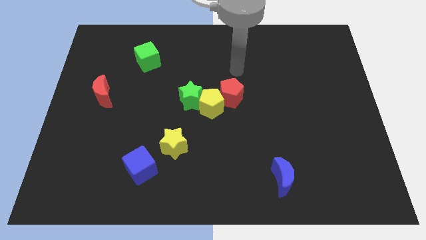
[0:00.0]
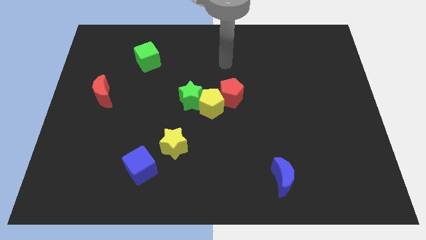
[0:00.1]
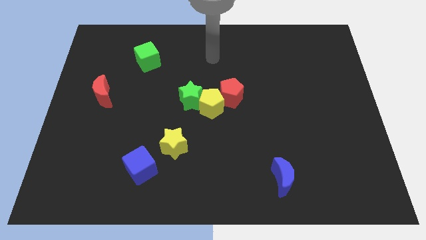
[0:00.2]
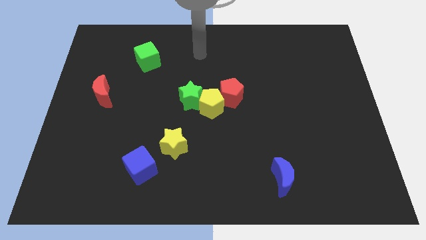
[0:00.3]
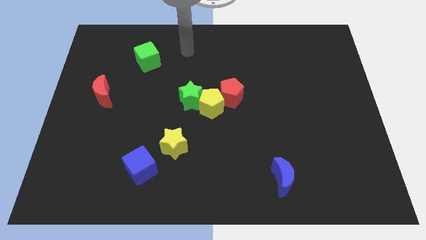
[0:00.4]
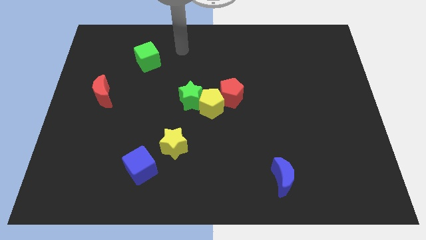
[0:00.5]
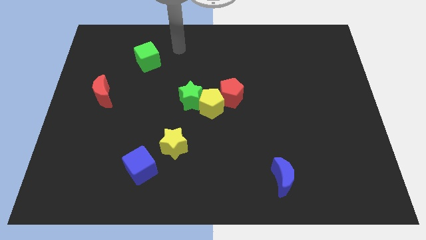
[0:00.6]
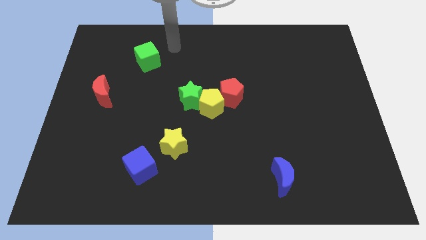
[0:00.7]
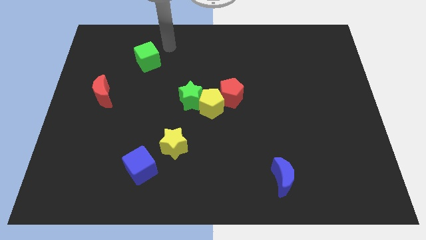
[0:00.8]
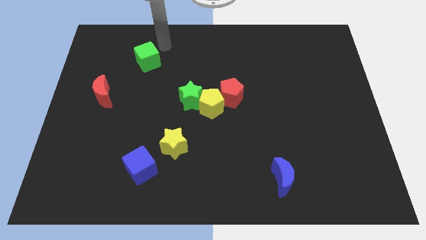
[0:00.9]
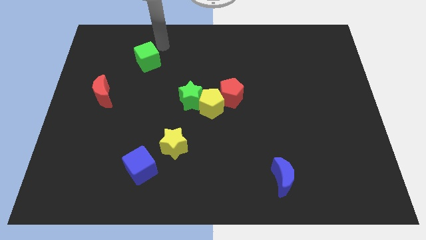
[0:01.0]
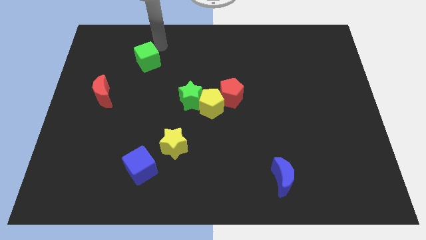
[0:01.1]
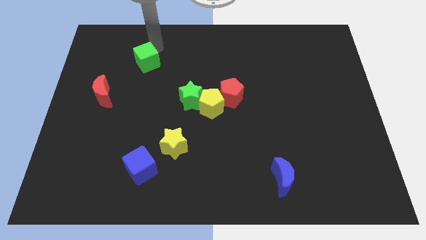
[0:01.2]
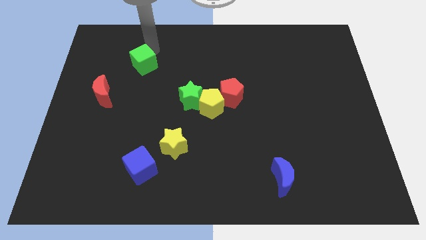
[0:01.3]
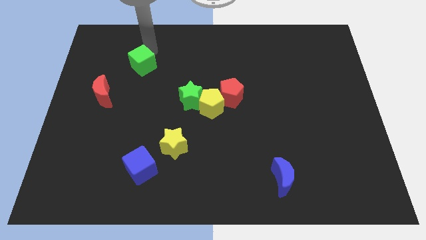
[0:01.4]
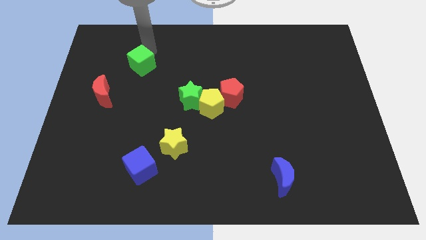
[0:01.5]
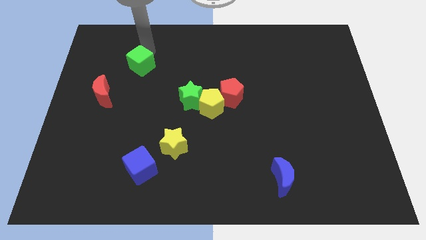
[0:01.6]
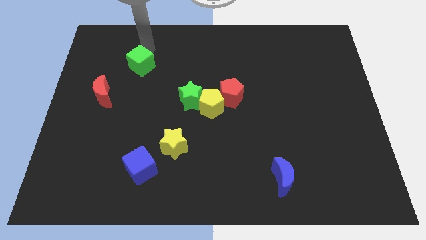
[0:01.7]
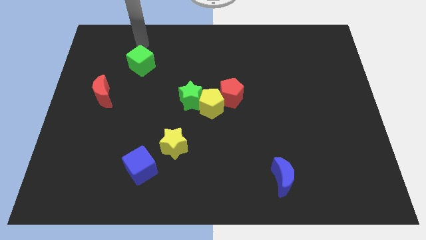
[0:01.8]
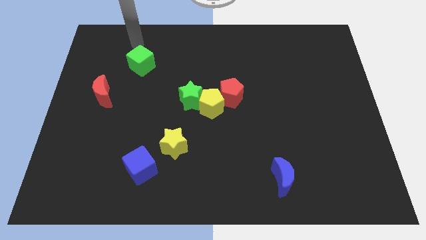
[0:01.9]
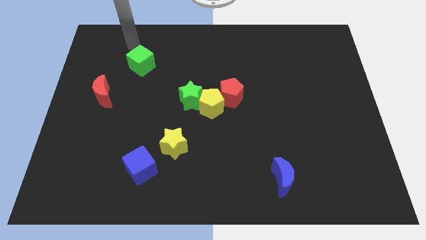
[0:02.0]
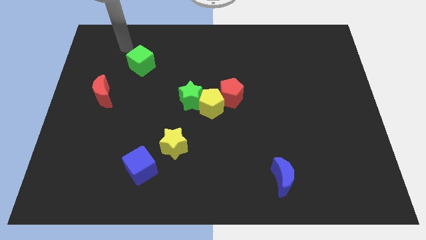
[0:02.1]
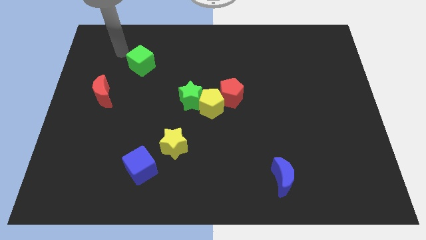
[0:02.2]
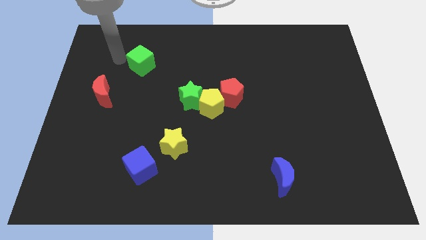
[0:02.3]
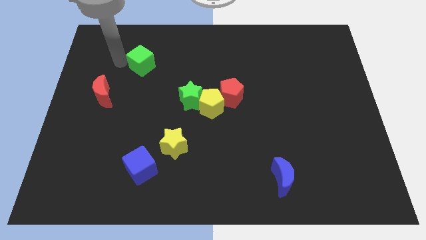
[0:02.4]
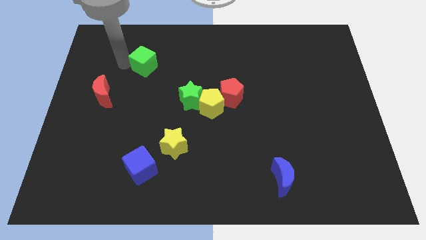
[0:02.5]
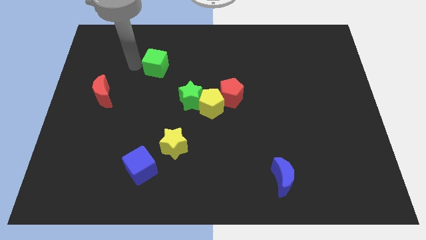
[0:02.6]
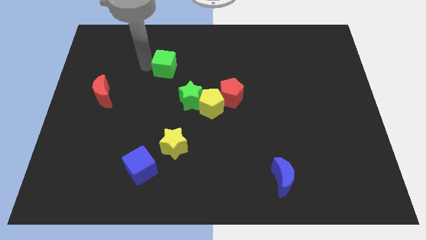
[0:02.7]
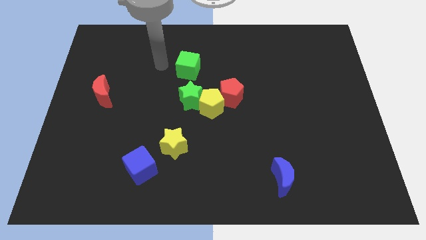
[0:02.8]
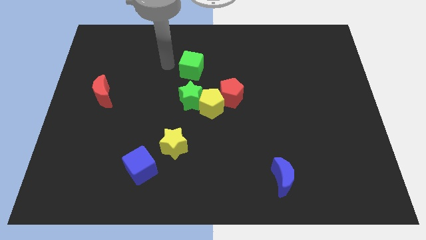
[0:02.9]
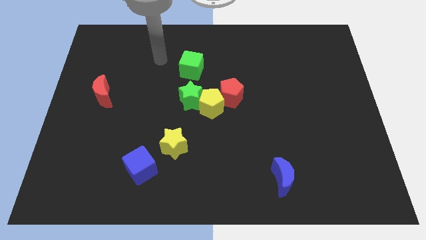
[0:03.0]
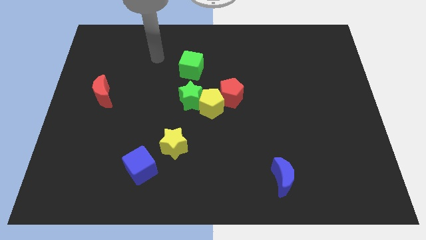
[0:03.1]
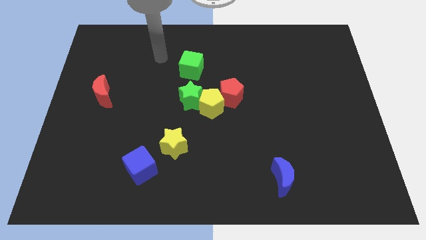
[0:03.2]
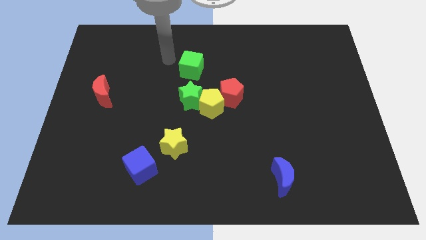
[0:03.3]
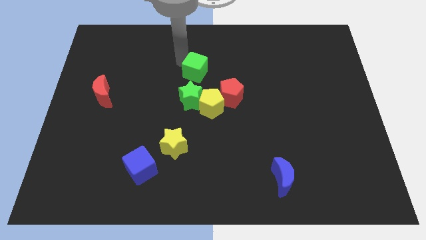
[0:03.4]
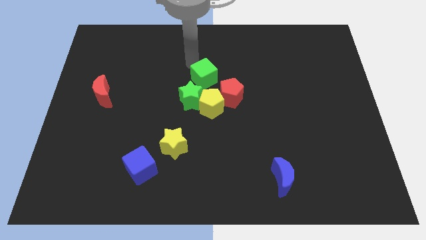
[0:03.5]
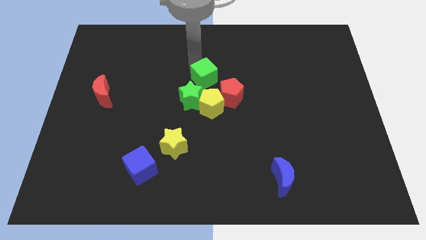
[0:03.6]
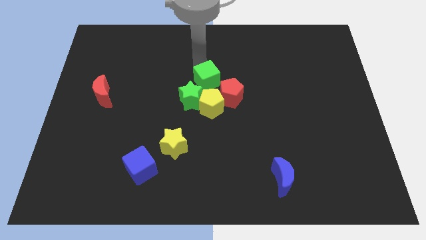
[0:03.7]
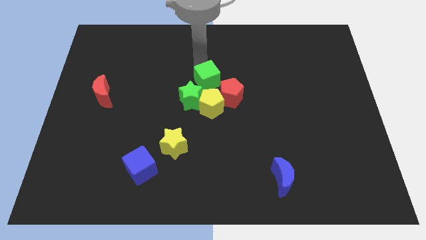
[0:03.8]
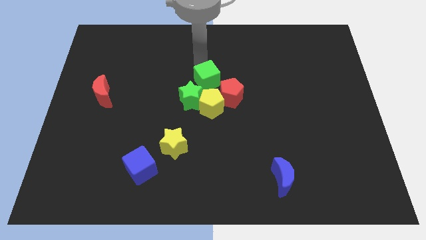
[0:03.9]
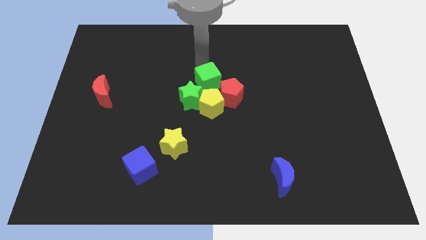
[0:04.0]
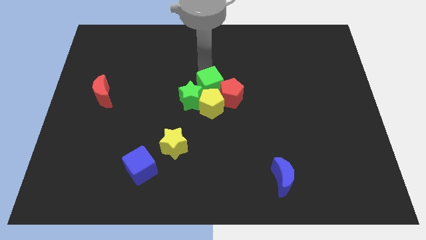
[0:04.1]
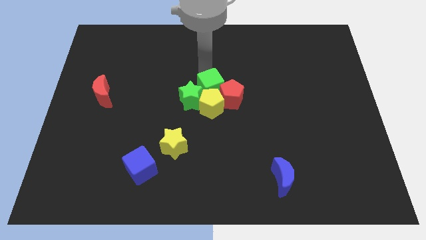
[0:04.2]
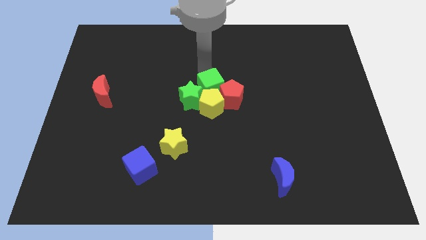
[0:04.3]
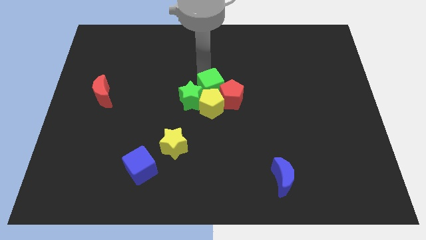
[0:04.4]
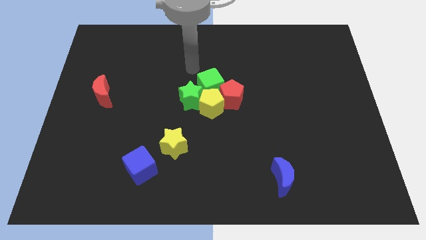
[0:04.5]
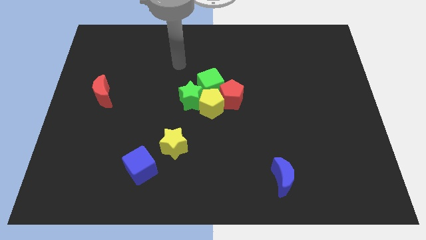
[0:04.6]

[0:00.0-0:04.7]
move the green cube on top of the yellow pentagon

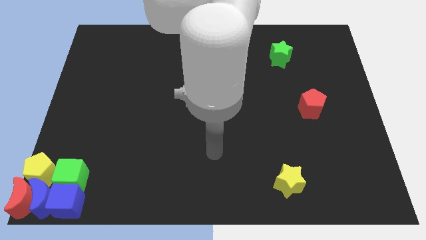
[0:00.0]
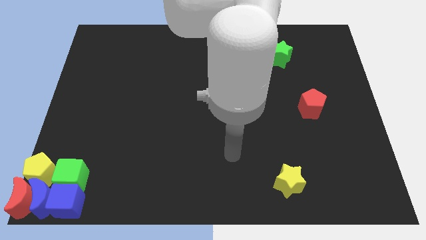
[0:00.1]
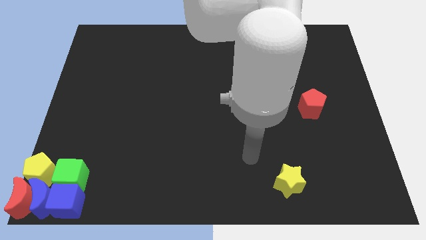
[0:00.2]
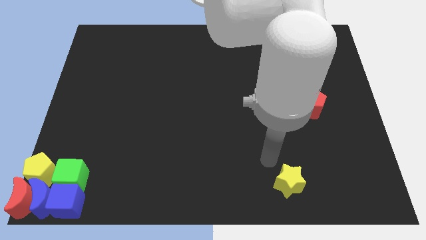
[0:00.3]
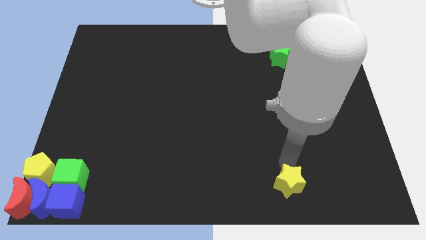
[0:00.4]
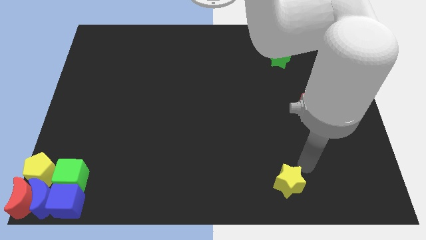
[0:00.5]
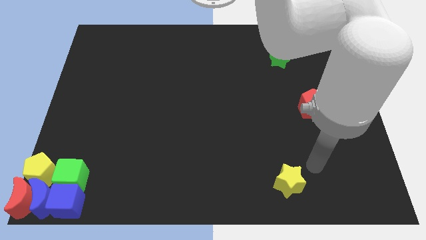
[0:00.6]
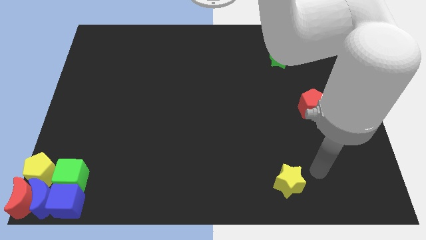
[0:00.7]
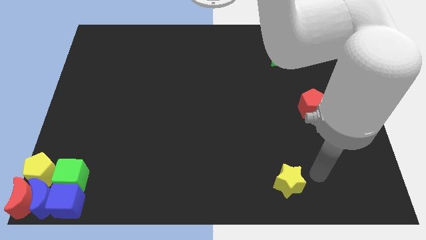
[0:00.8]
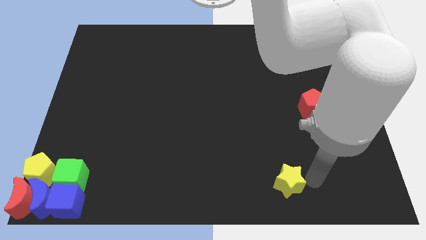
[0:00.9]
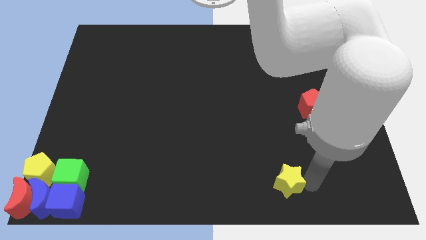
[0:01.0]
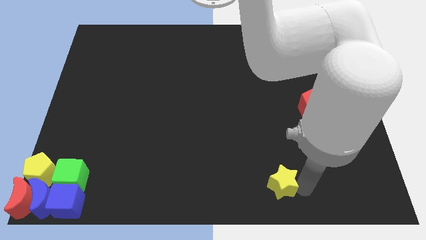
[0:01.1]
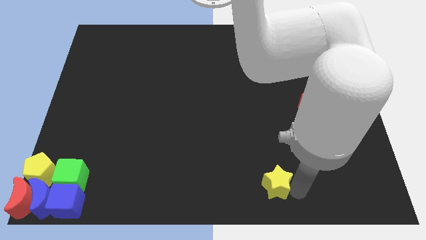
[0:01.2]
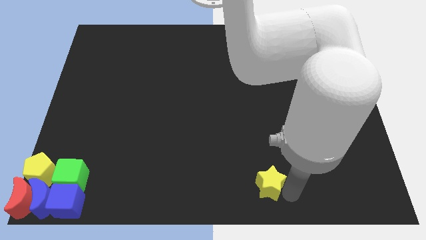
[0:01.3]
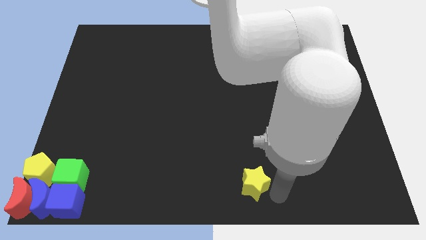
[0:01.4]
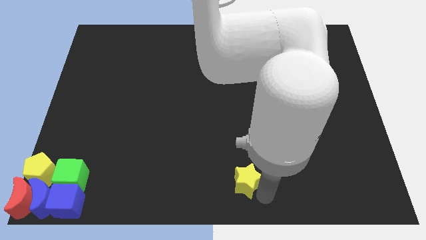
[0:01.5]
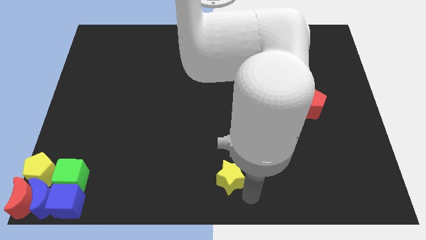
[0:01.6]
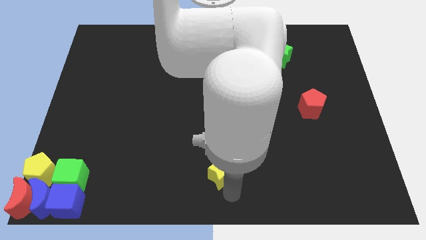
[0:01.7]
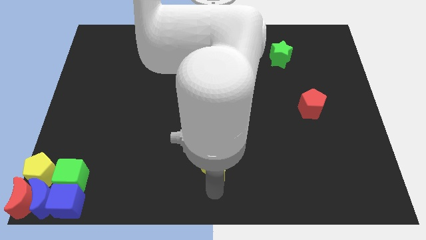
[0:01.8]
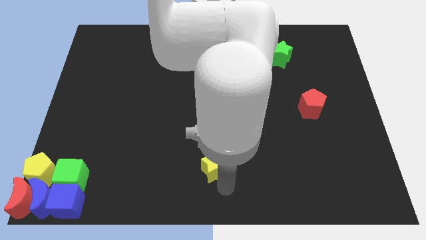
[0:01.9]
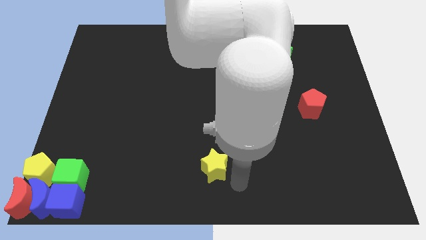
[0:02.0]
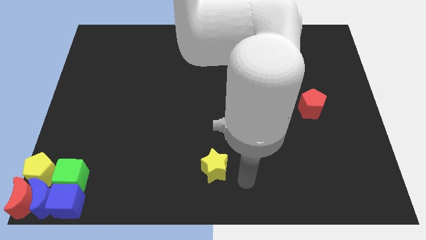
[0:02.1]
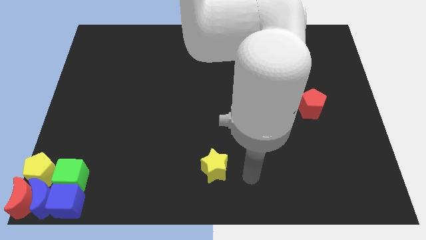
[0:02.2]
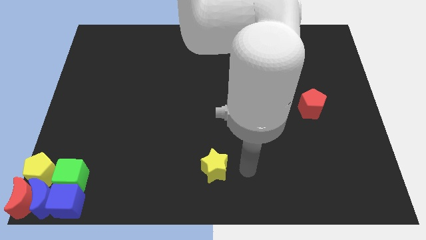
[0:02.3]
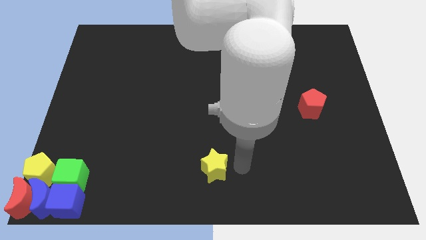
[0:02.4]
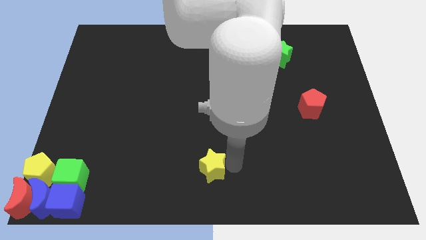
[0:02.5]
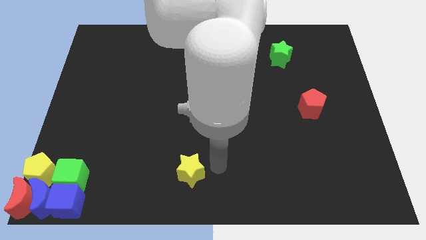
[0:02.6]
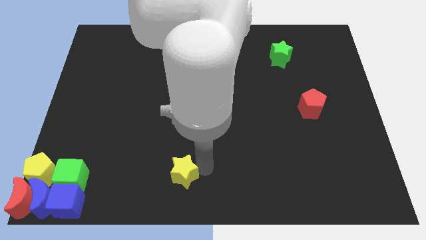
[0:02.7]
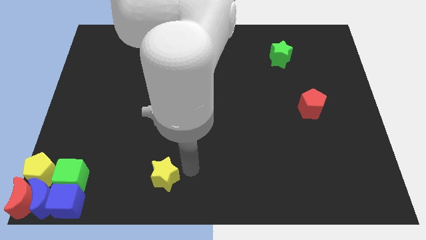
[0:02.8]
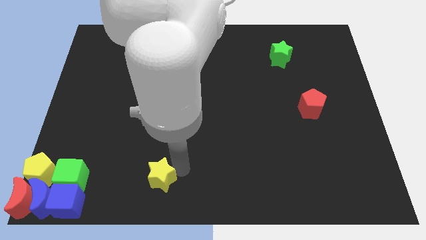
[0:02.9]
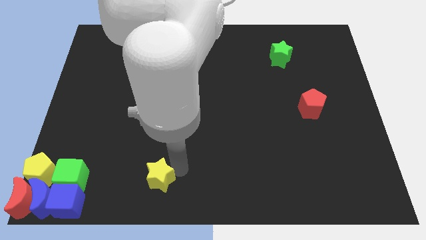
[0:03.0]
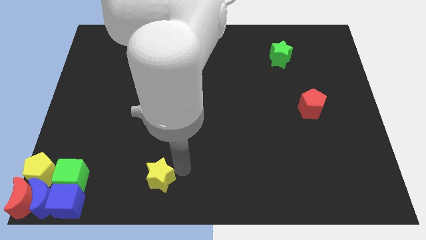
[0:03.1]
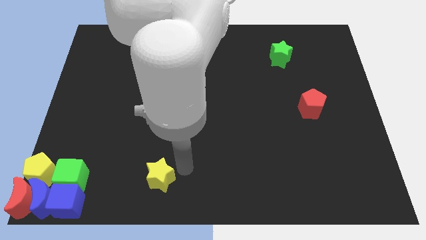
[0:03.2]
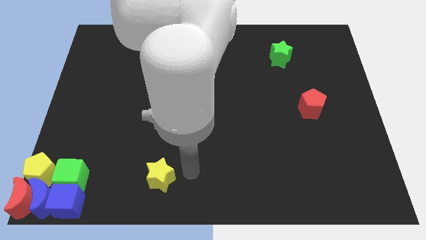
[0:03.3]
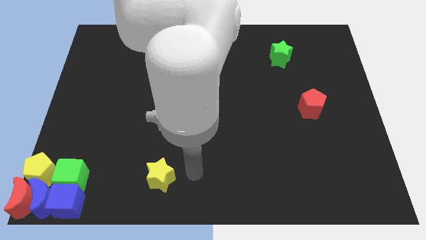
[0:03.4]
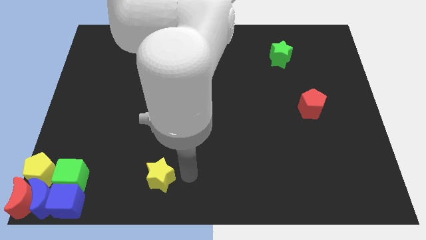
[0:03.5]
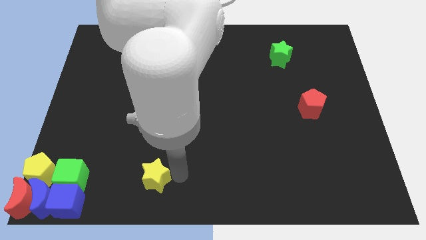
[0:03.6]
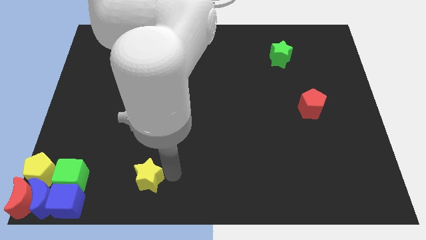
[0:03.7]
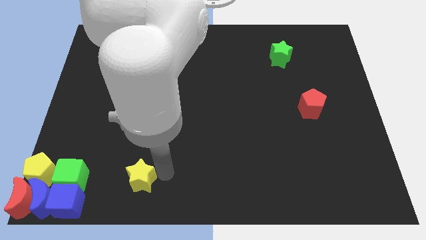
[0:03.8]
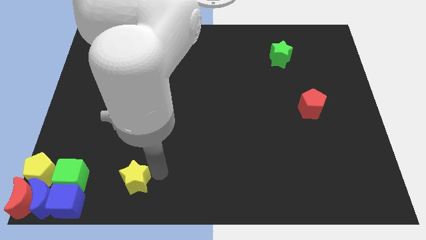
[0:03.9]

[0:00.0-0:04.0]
slide the yellow star towards the bottom left

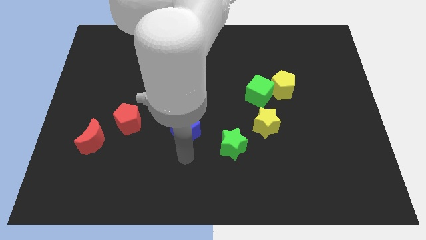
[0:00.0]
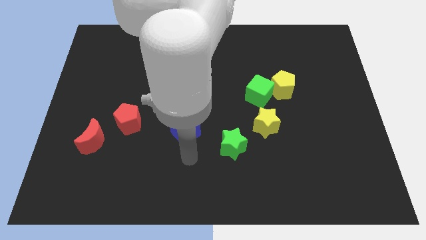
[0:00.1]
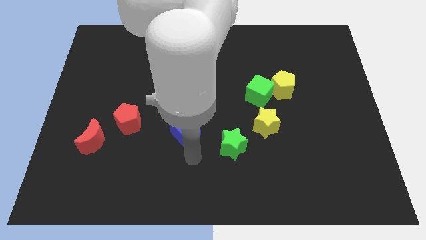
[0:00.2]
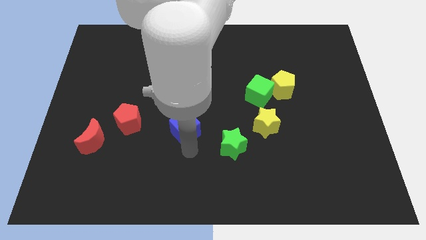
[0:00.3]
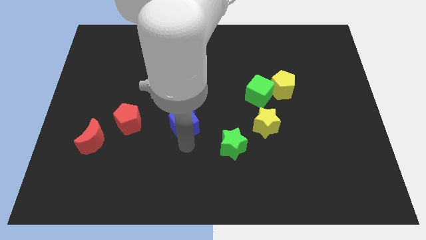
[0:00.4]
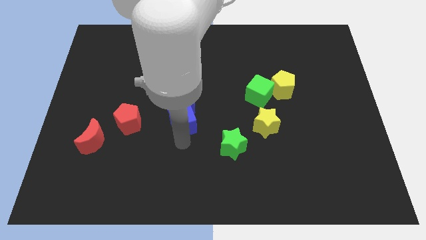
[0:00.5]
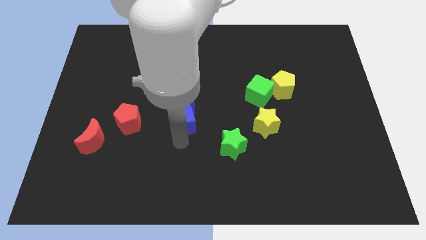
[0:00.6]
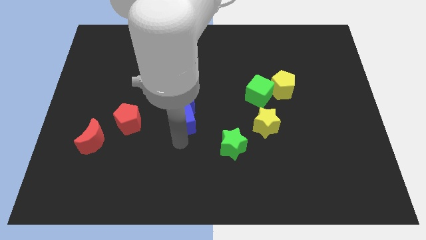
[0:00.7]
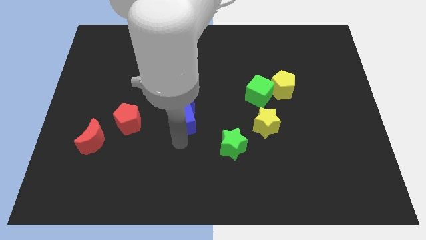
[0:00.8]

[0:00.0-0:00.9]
slightly push the blue cube towards the blue moon
